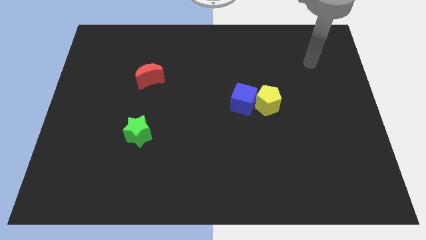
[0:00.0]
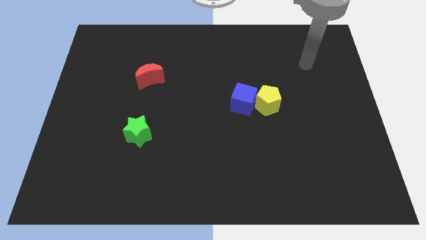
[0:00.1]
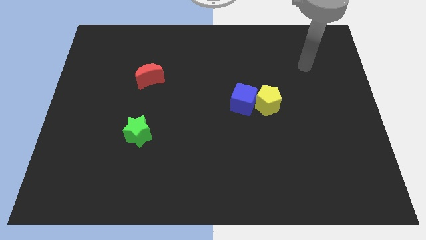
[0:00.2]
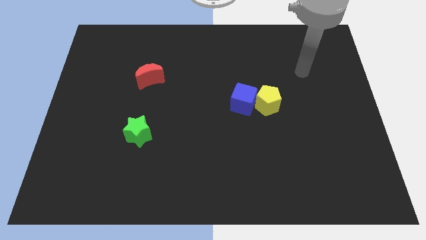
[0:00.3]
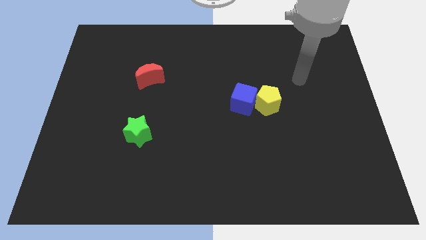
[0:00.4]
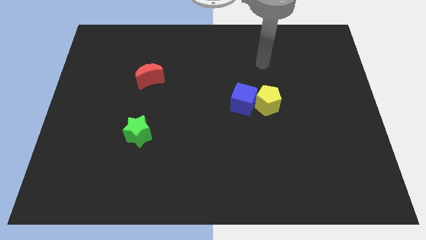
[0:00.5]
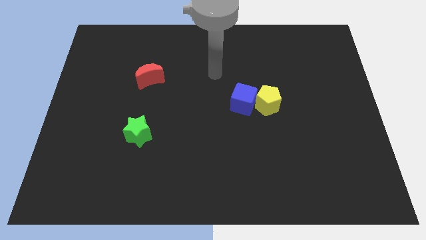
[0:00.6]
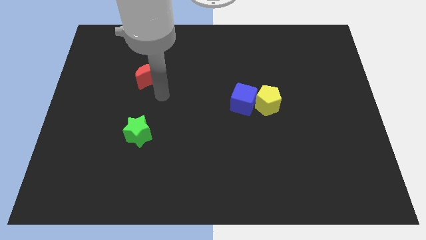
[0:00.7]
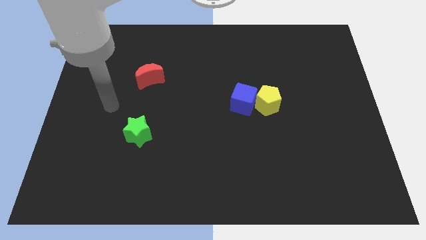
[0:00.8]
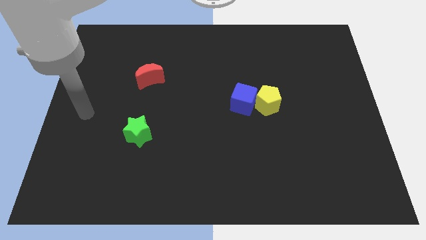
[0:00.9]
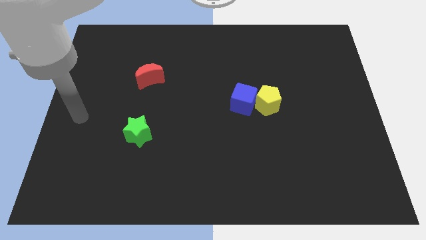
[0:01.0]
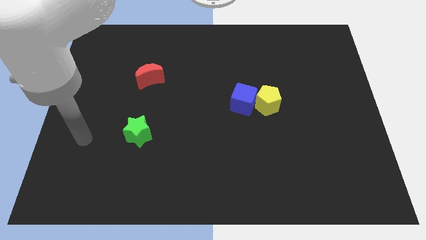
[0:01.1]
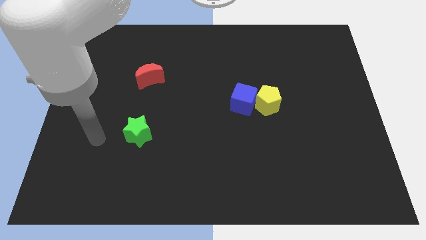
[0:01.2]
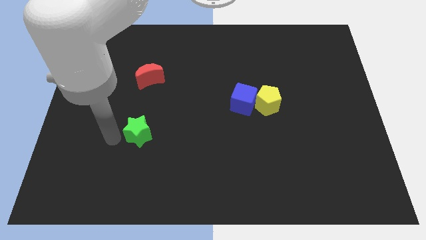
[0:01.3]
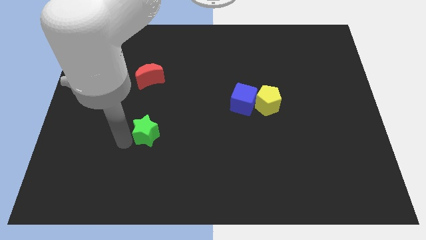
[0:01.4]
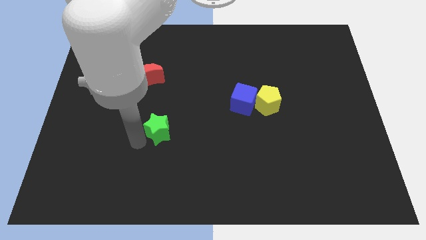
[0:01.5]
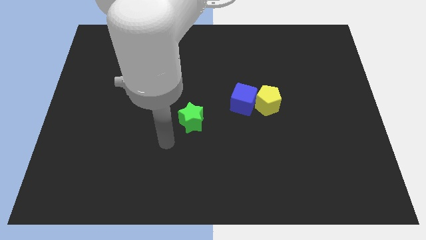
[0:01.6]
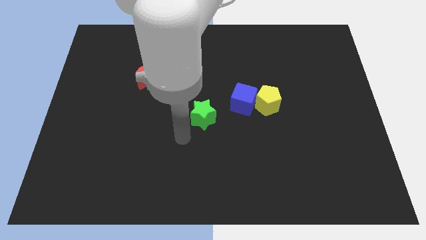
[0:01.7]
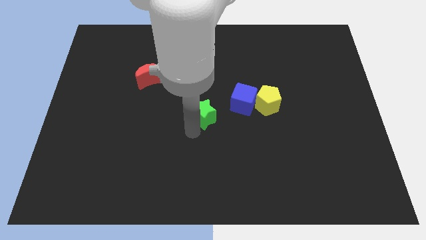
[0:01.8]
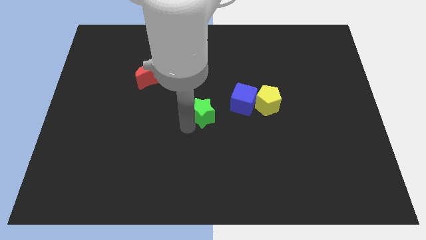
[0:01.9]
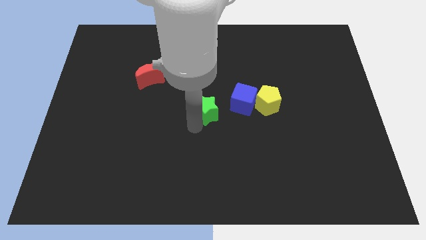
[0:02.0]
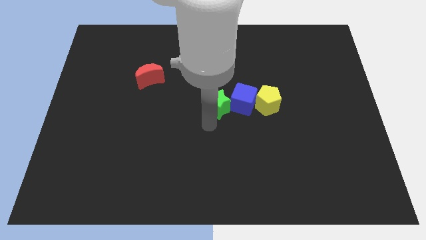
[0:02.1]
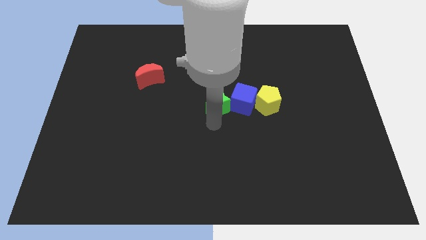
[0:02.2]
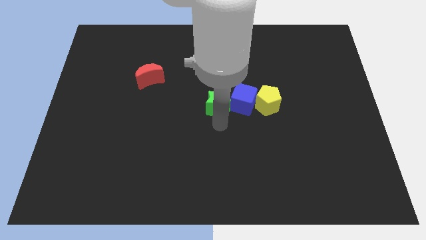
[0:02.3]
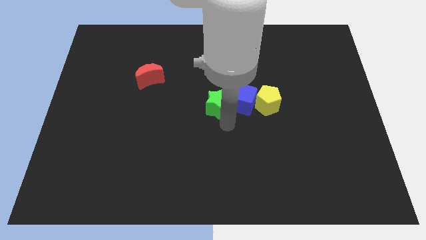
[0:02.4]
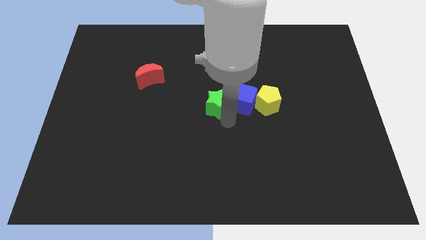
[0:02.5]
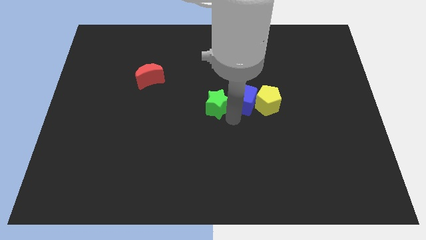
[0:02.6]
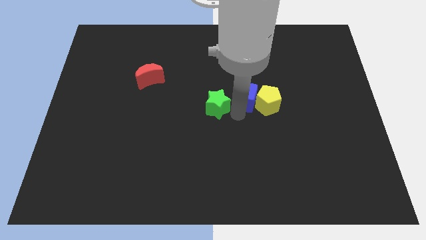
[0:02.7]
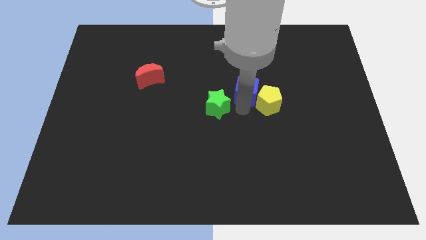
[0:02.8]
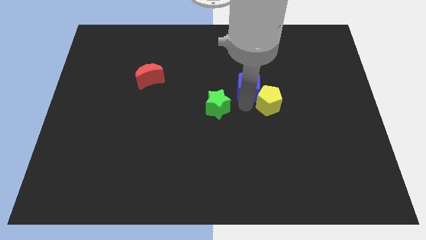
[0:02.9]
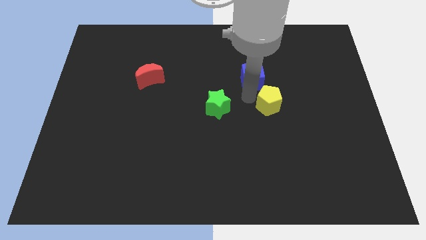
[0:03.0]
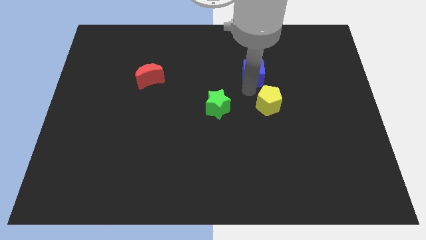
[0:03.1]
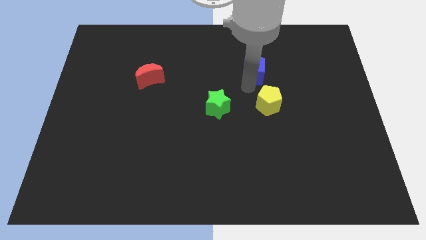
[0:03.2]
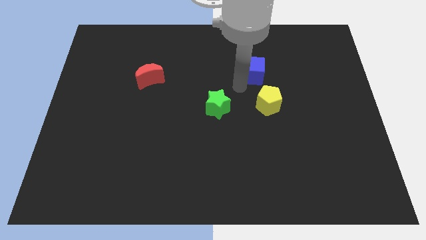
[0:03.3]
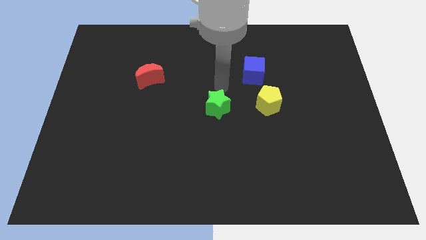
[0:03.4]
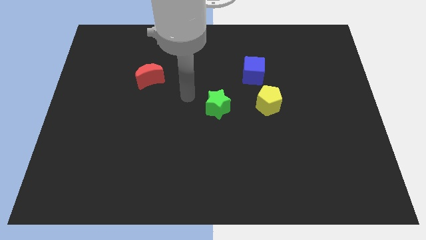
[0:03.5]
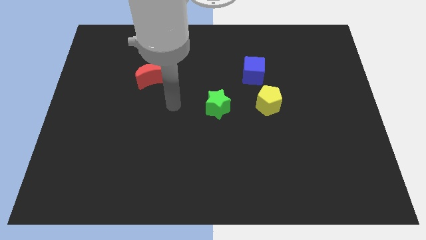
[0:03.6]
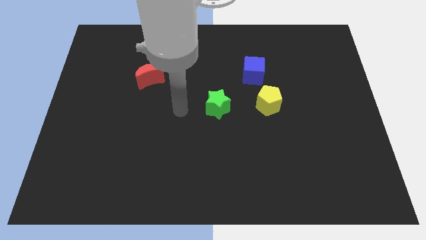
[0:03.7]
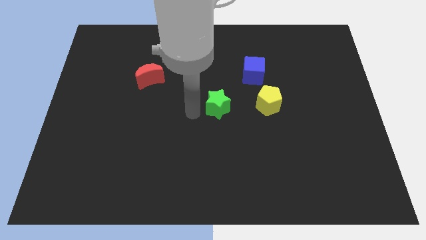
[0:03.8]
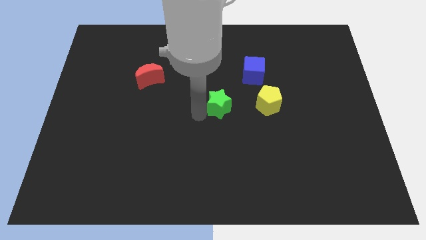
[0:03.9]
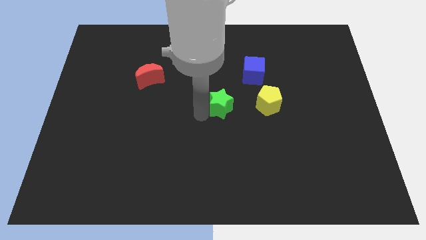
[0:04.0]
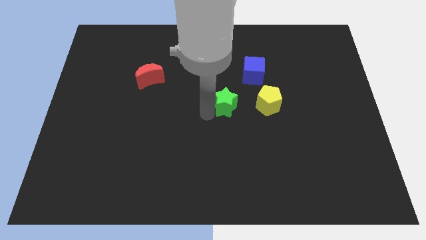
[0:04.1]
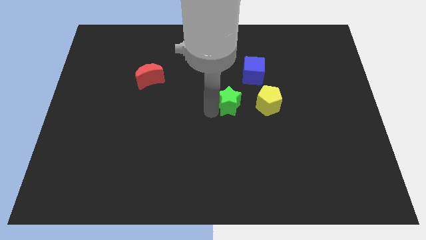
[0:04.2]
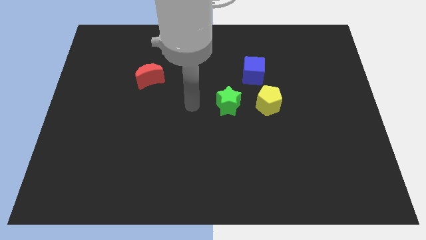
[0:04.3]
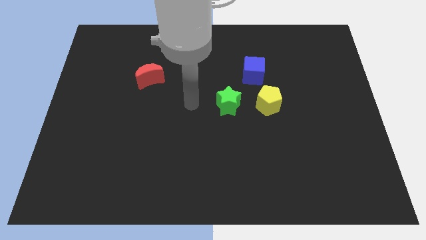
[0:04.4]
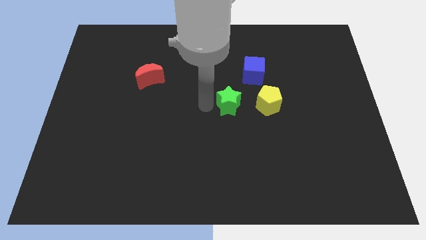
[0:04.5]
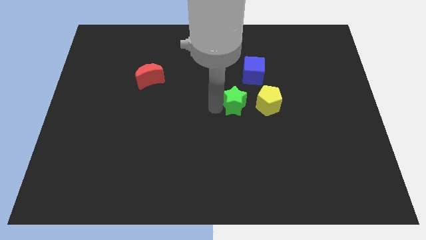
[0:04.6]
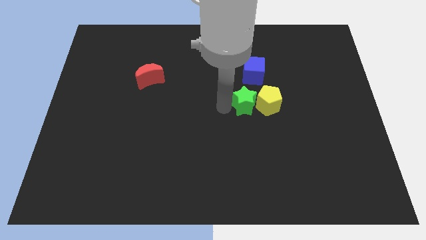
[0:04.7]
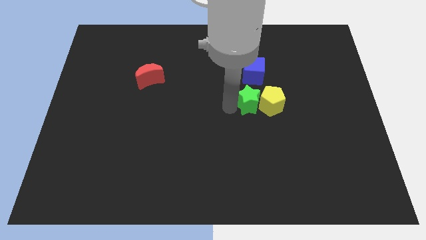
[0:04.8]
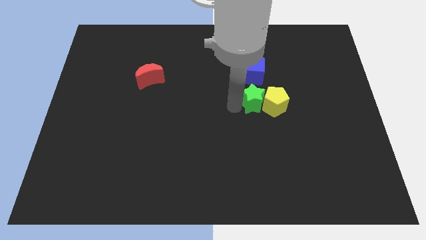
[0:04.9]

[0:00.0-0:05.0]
slide the green block next to the yellow block

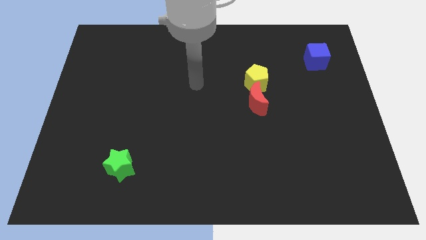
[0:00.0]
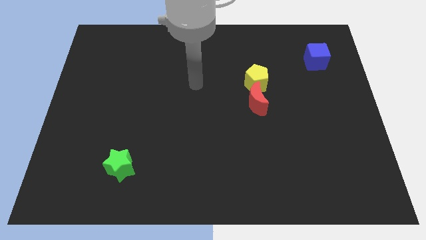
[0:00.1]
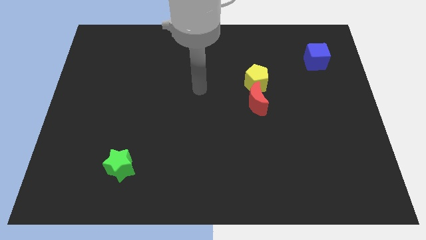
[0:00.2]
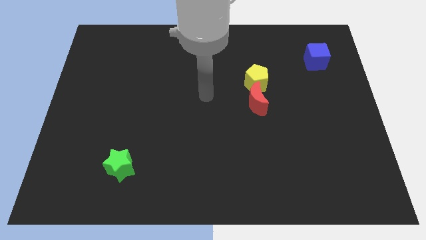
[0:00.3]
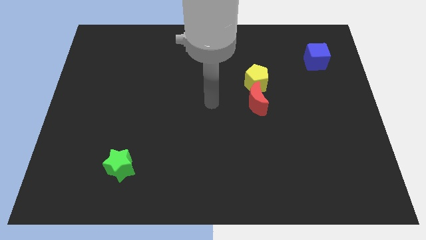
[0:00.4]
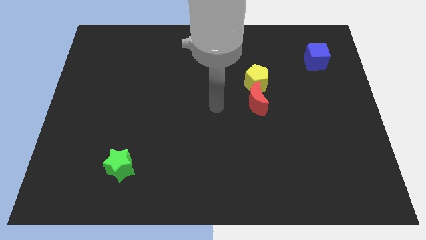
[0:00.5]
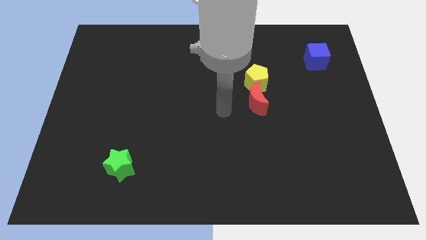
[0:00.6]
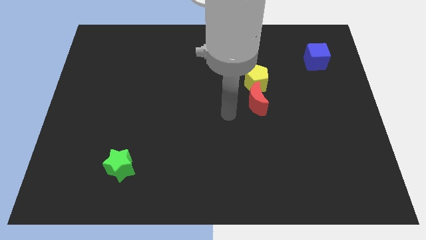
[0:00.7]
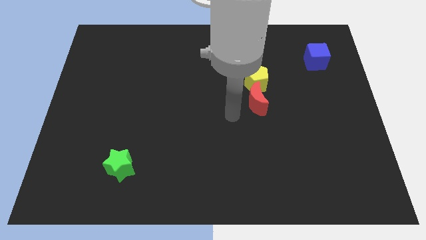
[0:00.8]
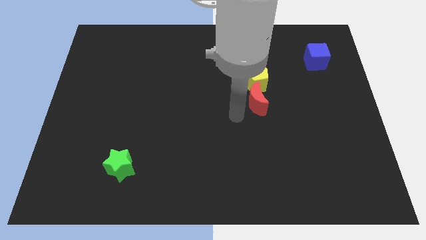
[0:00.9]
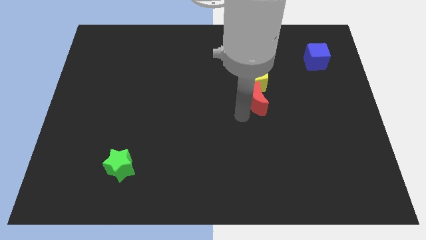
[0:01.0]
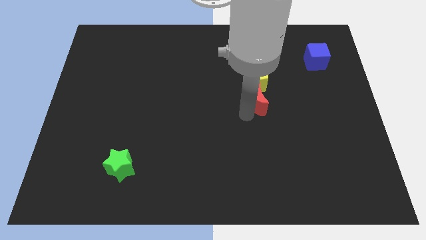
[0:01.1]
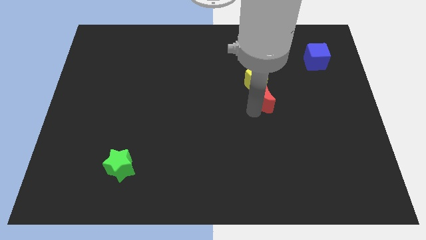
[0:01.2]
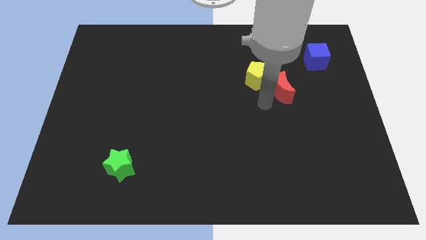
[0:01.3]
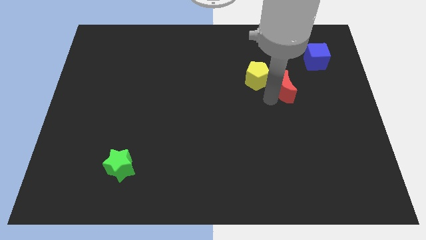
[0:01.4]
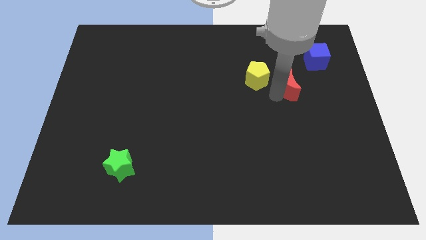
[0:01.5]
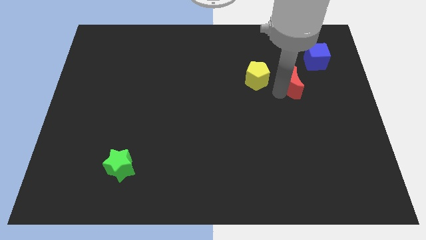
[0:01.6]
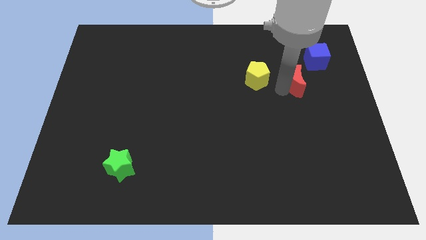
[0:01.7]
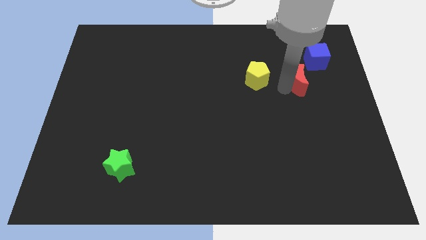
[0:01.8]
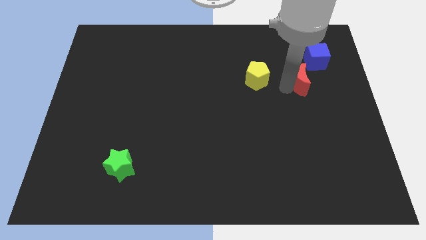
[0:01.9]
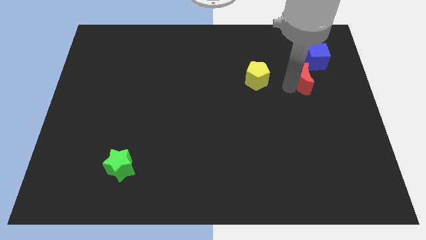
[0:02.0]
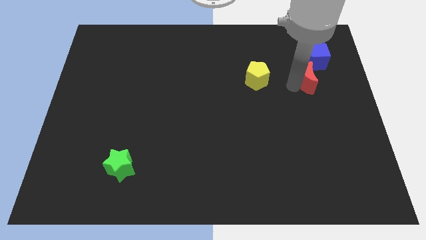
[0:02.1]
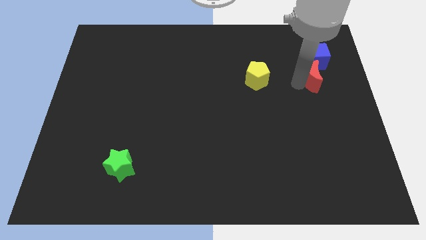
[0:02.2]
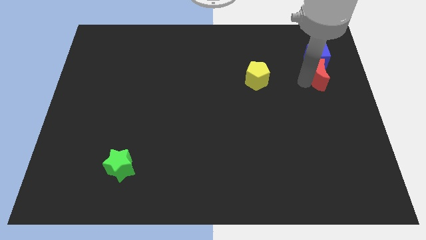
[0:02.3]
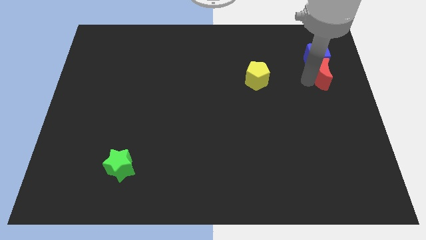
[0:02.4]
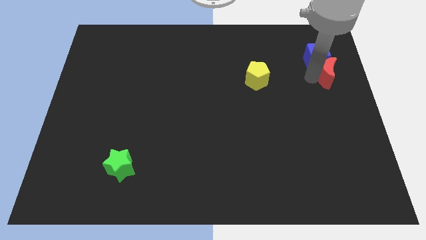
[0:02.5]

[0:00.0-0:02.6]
put the red moon towards the blue cube

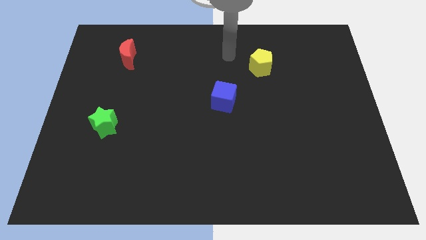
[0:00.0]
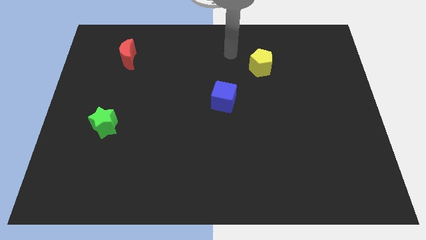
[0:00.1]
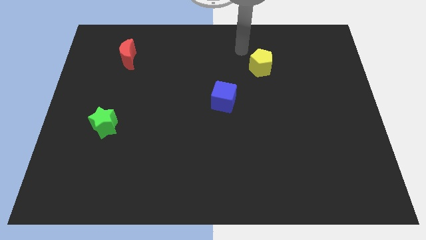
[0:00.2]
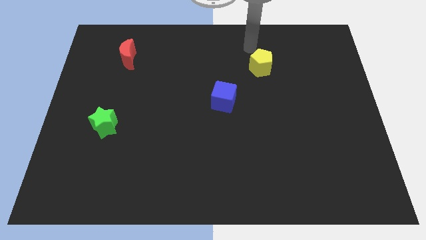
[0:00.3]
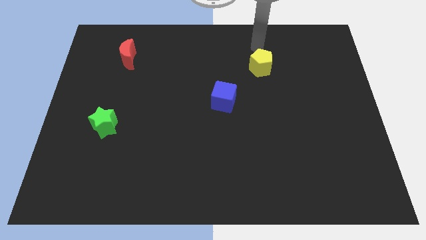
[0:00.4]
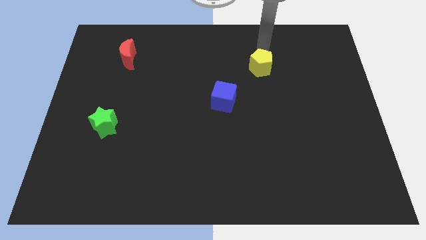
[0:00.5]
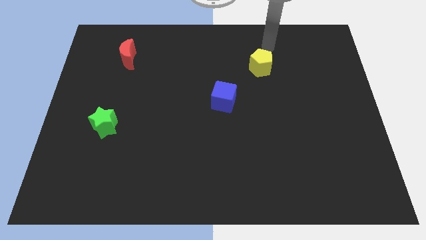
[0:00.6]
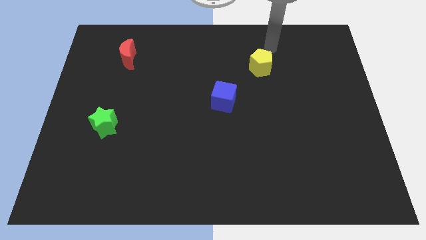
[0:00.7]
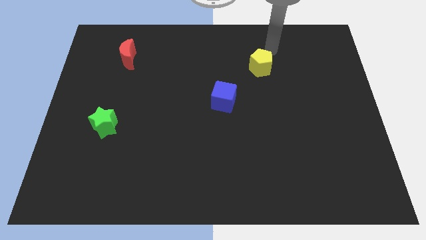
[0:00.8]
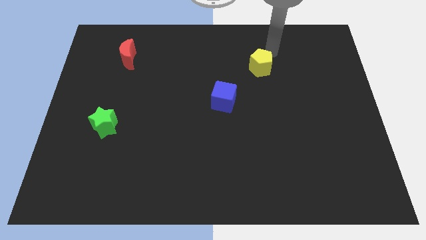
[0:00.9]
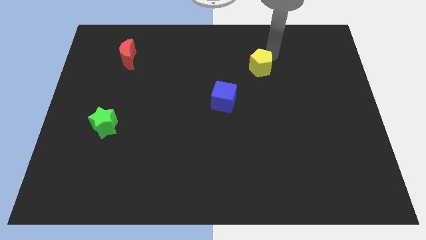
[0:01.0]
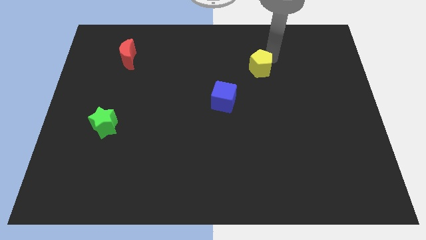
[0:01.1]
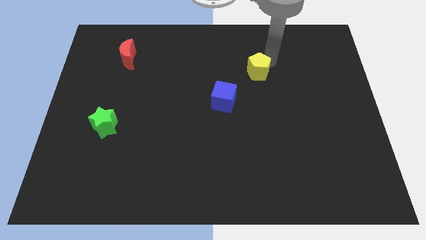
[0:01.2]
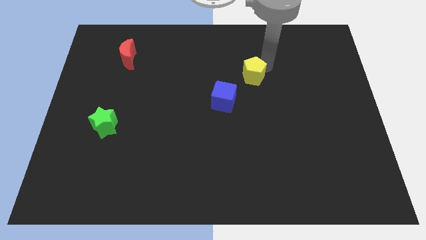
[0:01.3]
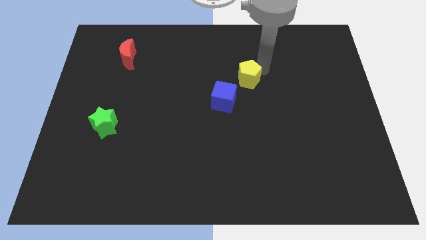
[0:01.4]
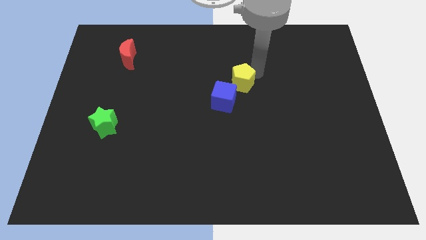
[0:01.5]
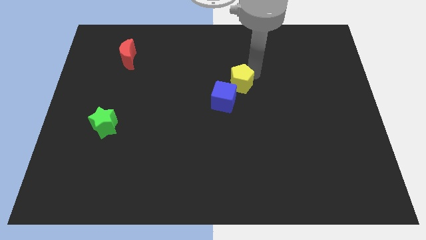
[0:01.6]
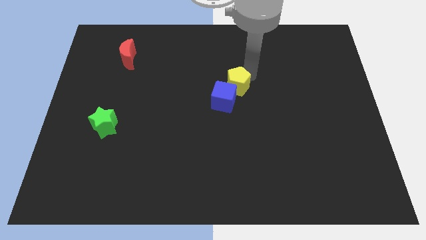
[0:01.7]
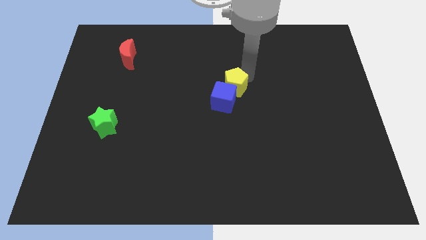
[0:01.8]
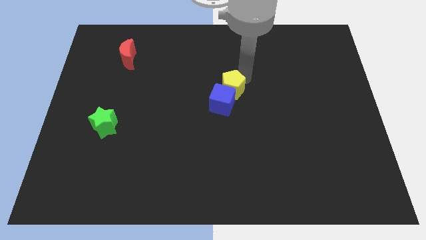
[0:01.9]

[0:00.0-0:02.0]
push the pentagon to the blue cube
